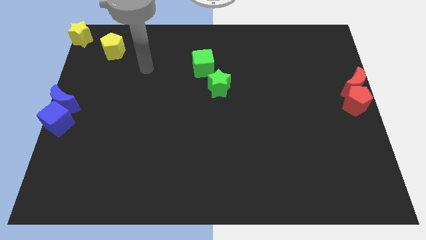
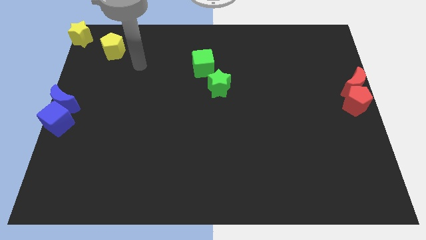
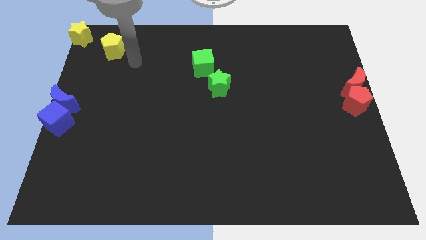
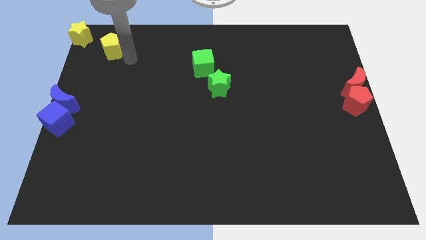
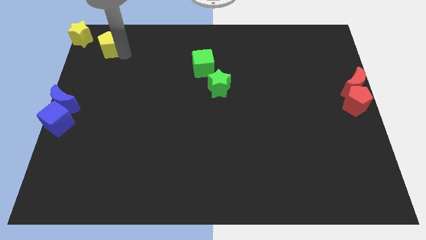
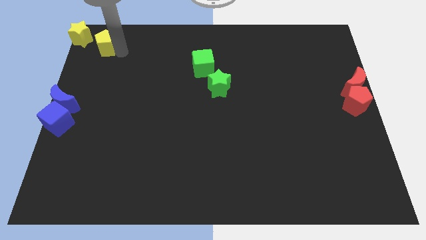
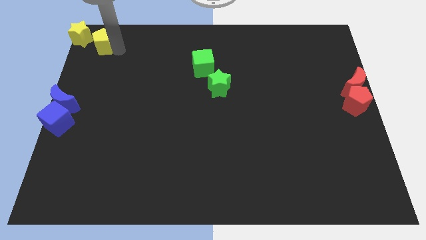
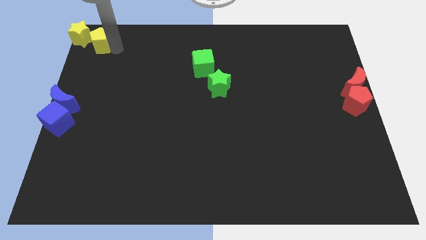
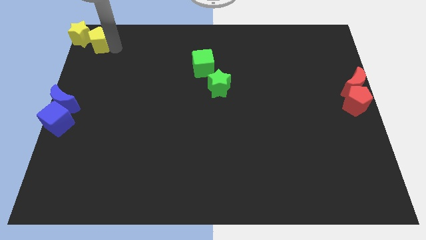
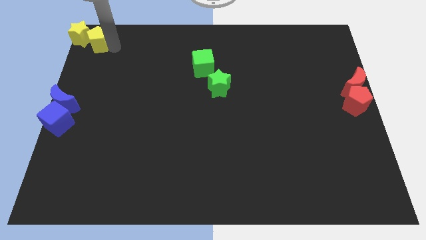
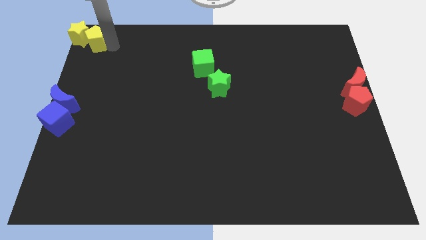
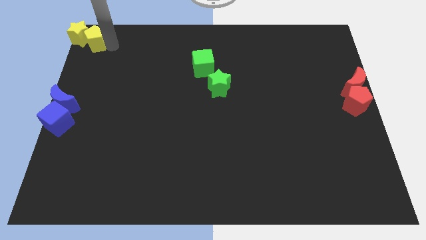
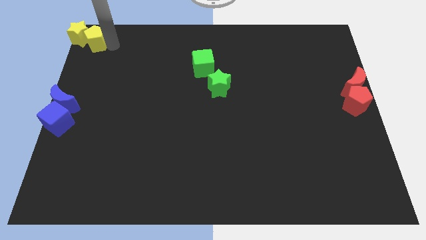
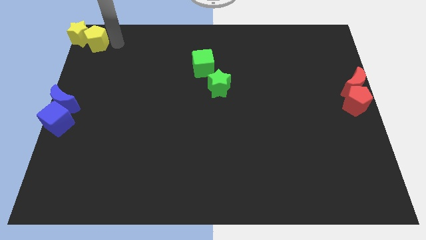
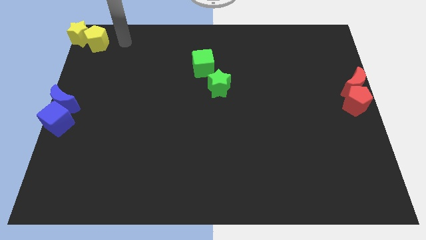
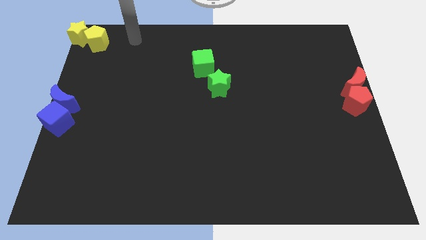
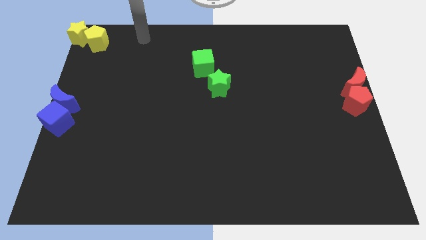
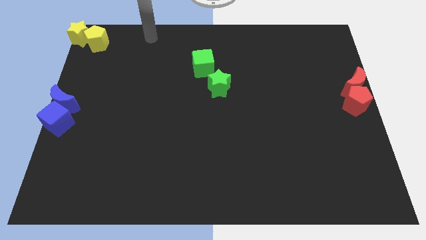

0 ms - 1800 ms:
push the yellow pentagon into the yellow star

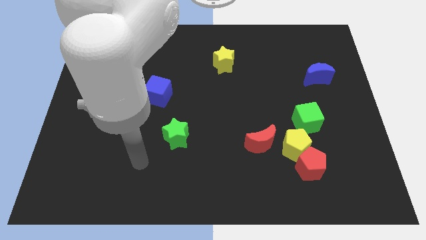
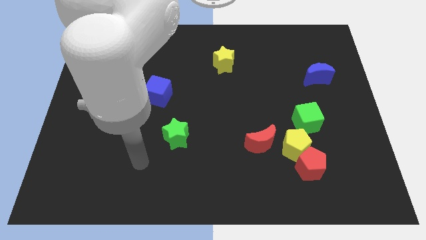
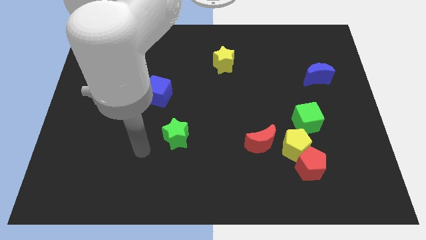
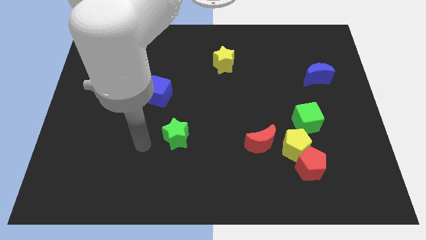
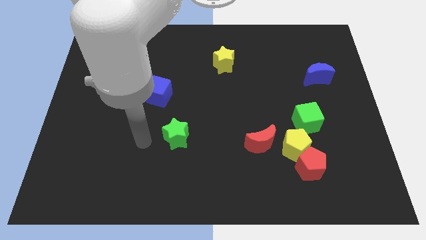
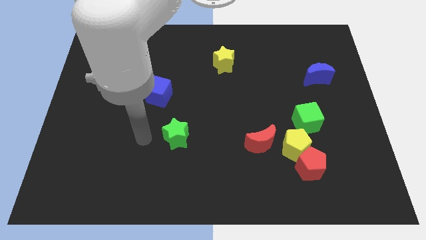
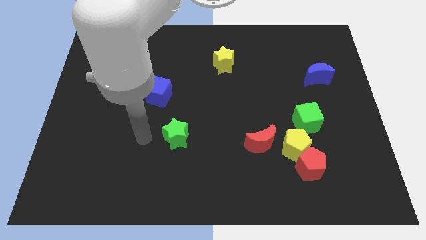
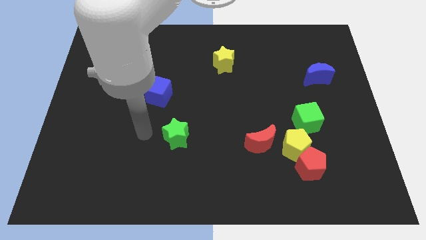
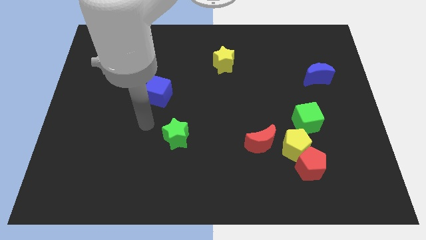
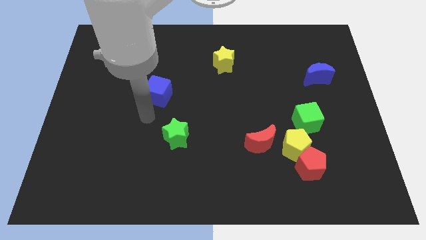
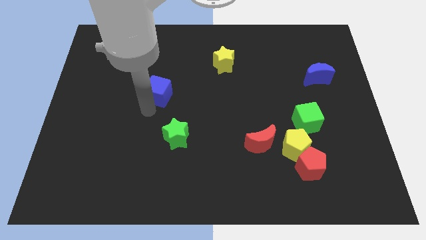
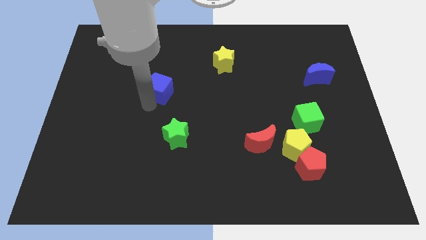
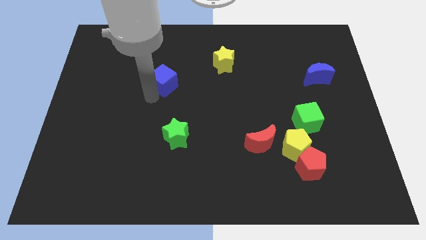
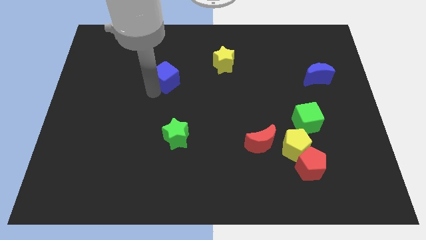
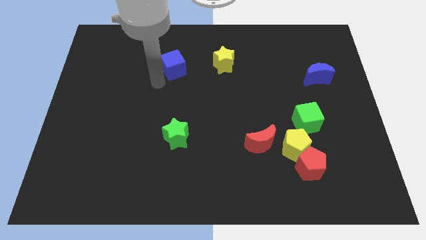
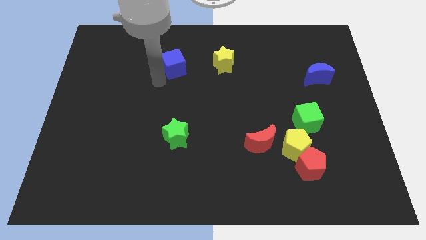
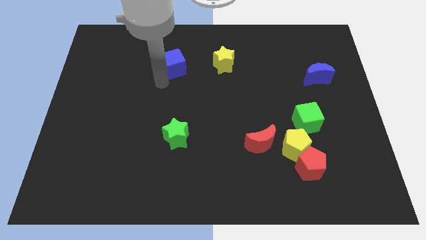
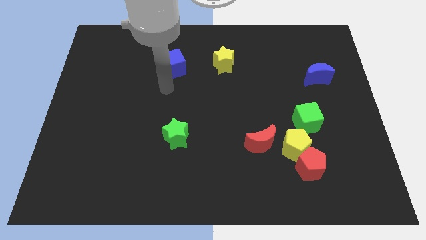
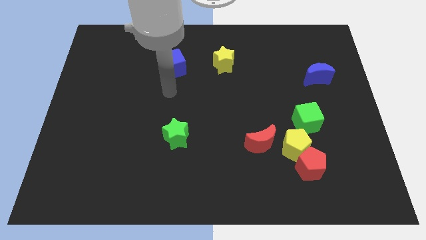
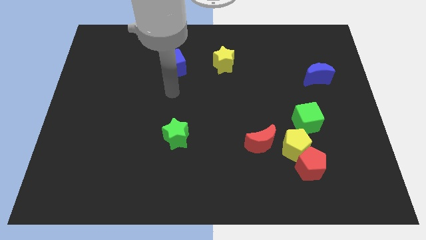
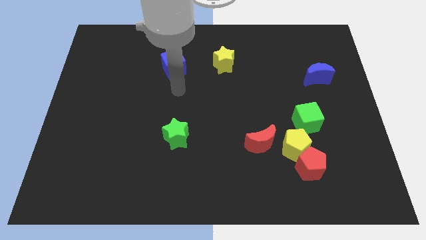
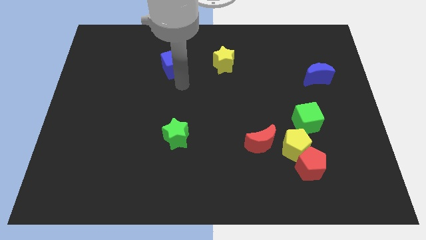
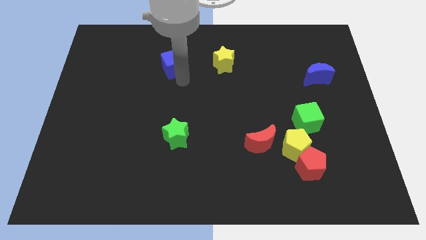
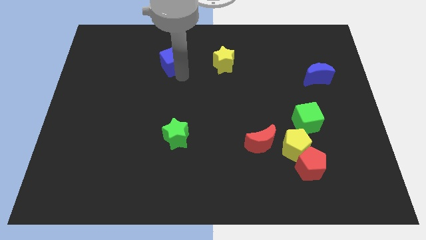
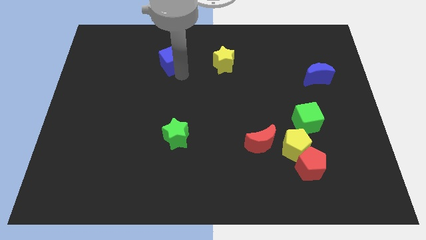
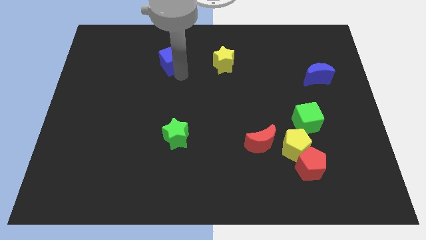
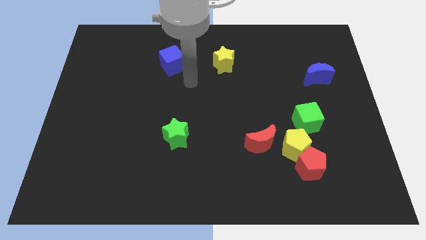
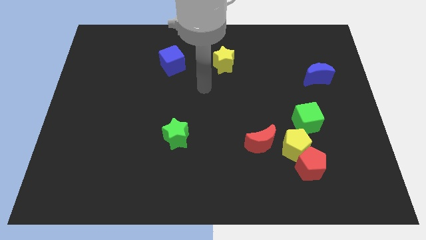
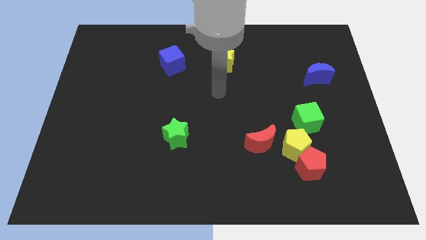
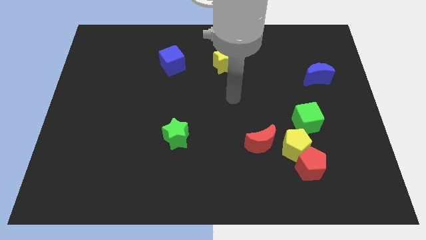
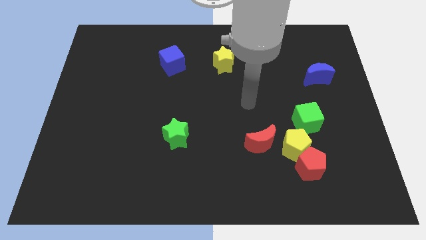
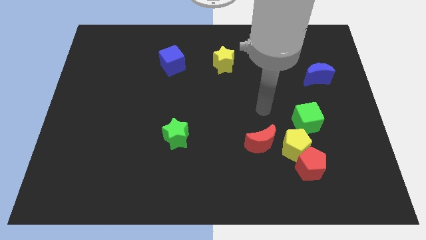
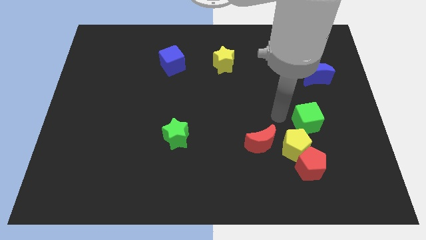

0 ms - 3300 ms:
push the blue cube towards top center of the board

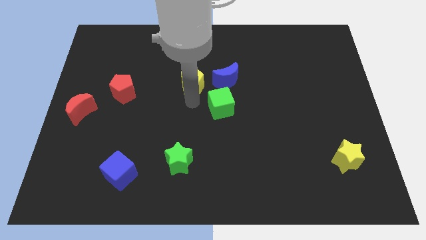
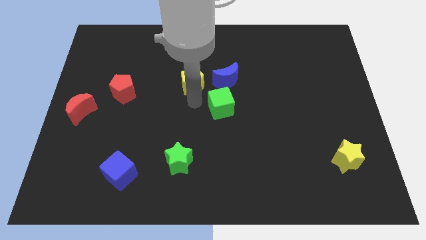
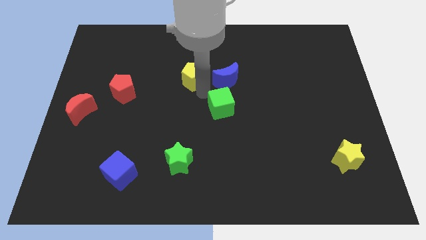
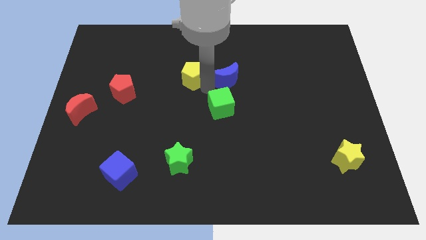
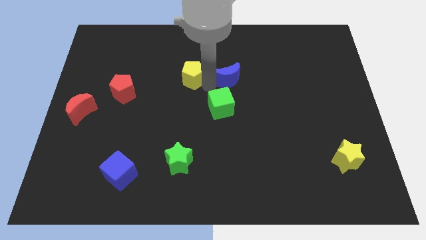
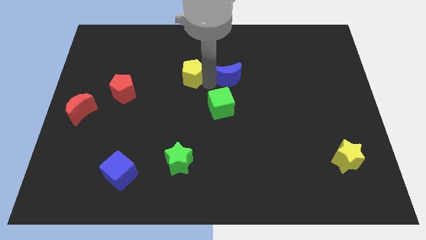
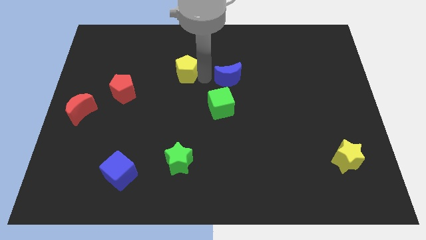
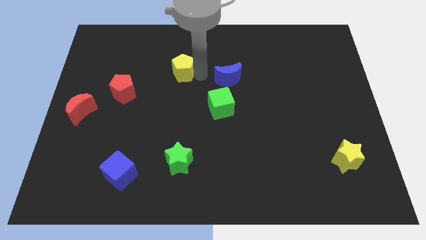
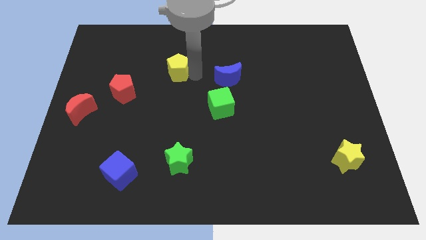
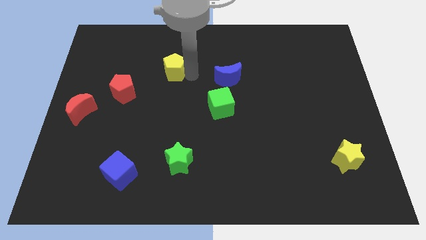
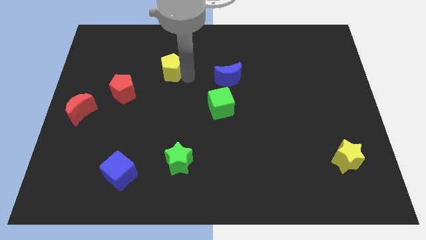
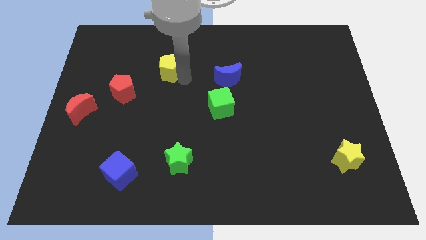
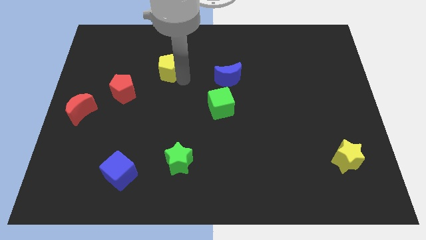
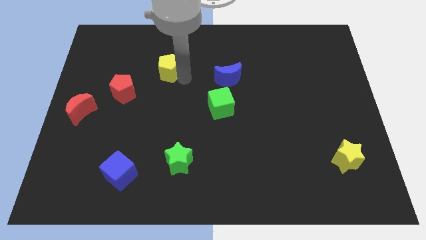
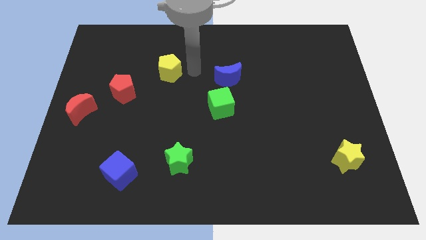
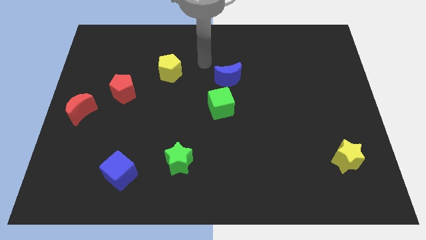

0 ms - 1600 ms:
separate the yellow pentagon from the blue crescent

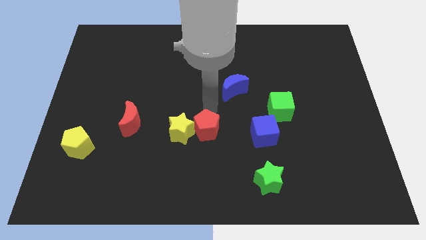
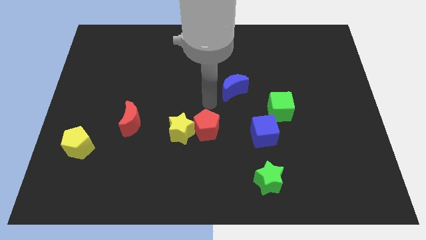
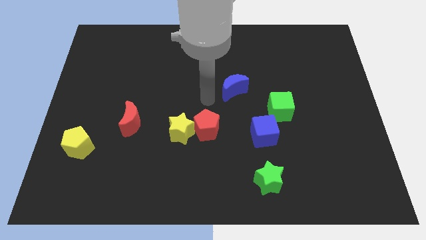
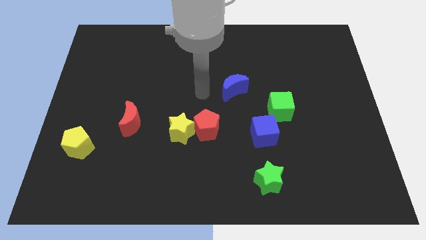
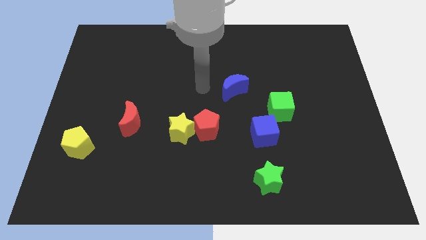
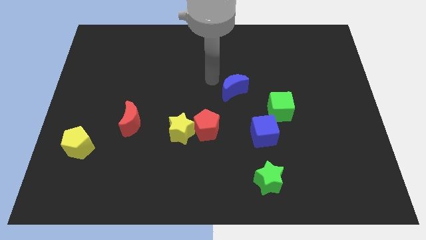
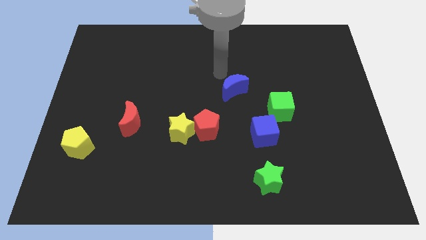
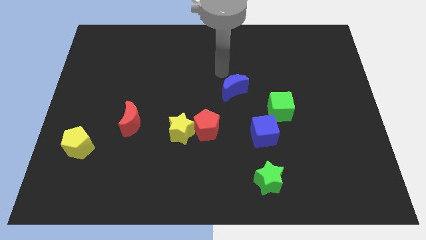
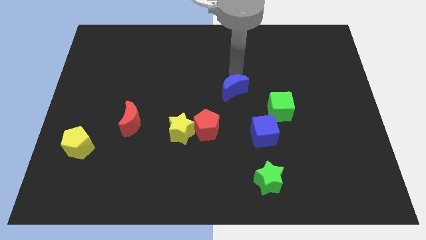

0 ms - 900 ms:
move the arm away from the red pentagon

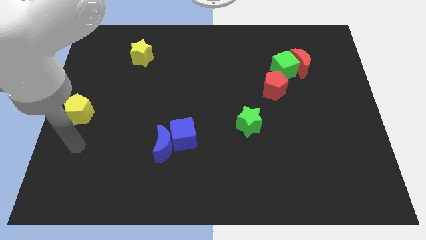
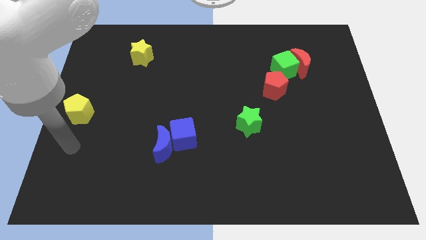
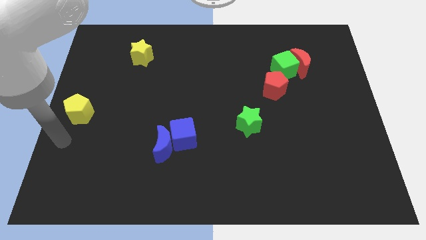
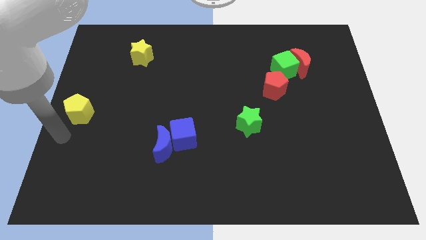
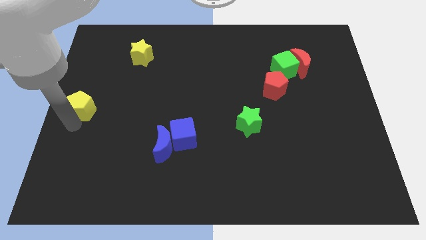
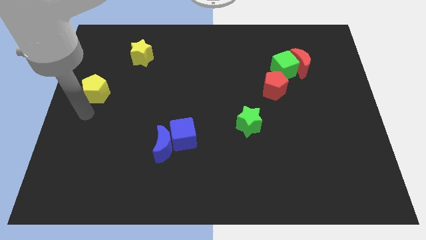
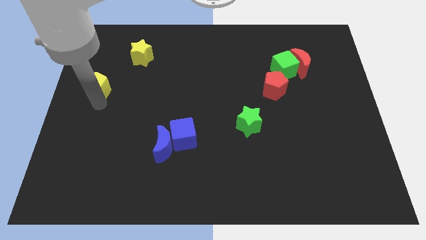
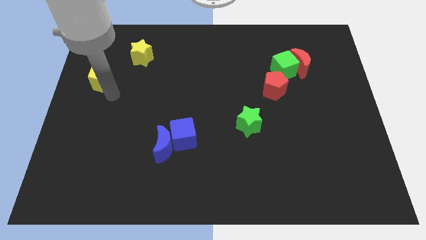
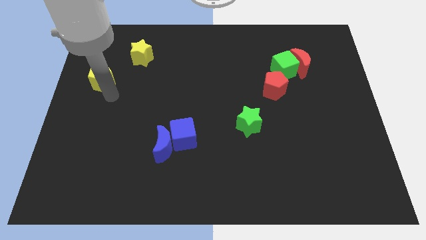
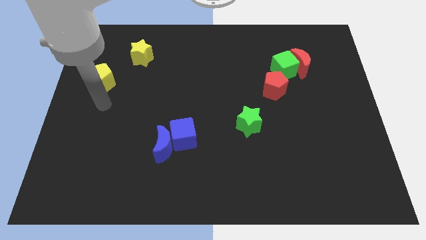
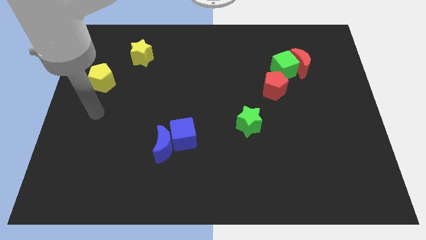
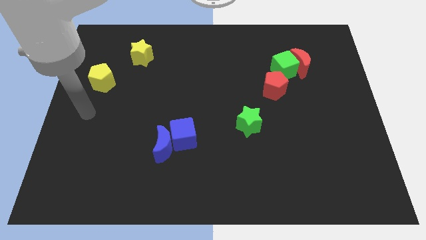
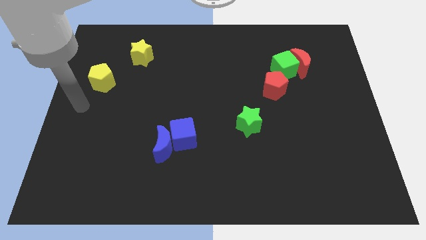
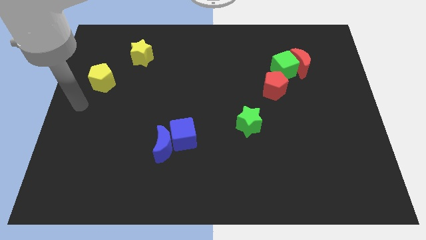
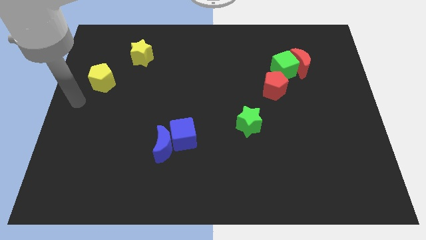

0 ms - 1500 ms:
place yellow pentagon vertically to the bottom left of the yellow star
